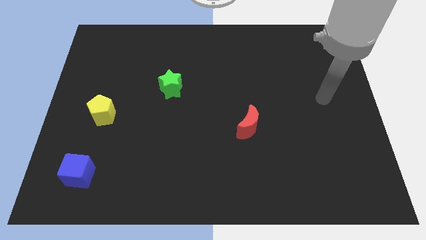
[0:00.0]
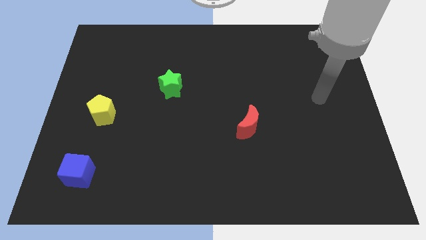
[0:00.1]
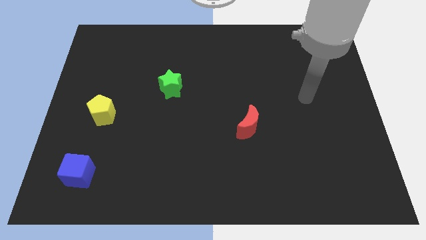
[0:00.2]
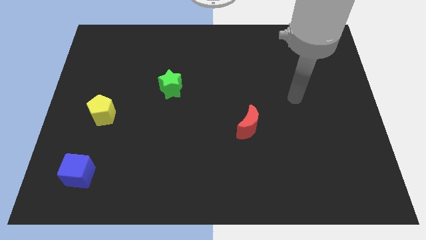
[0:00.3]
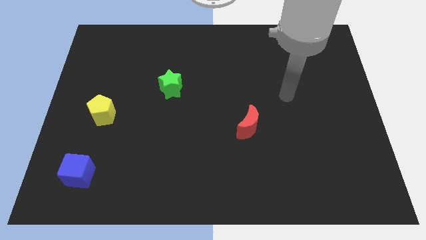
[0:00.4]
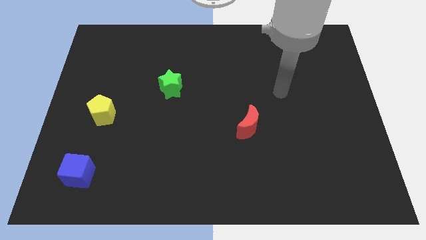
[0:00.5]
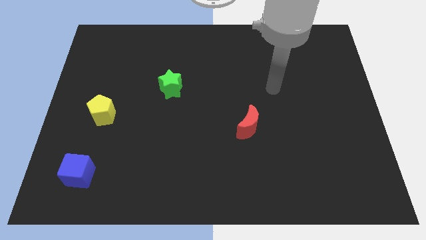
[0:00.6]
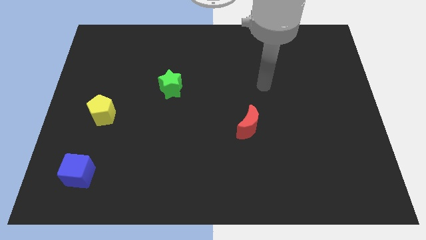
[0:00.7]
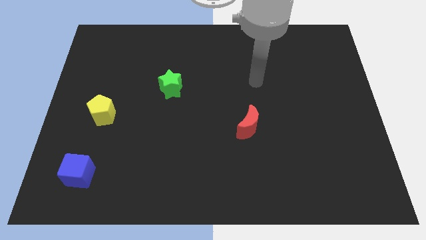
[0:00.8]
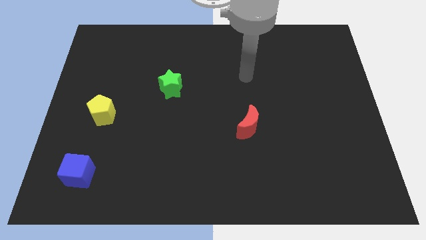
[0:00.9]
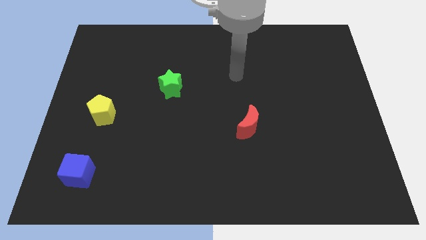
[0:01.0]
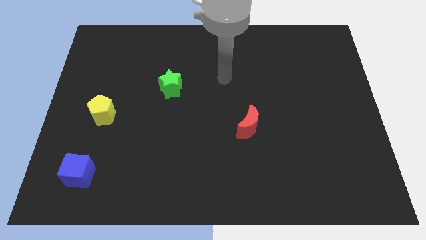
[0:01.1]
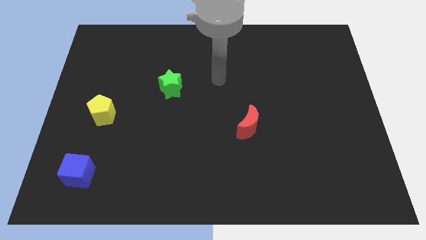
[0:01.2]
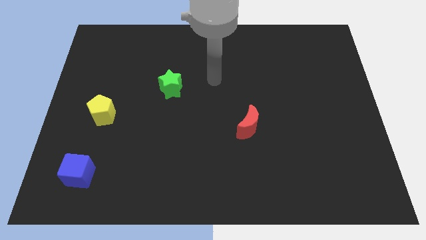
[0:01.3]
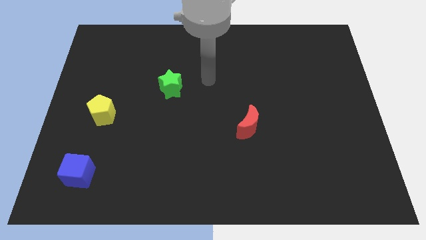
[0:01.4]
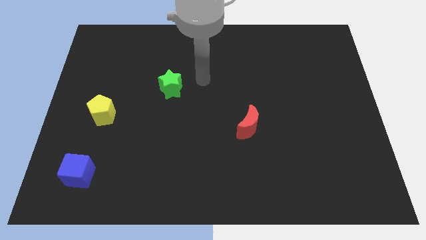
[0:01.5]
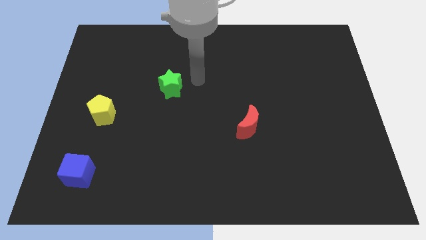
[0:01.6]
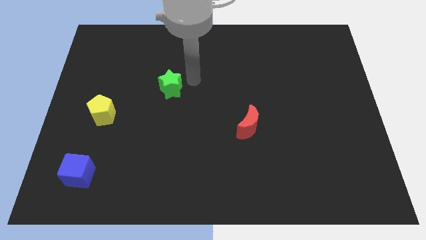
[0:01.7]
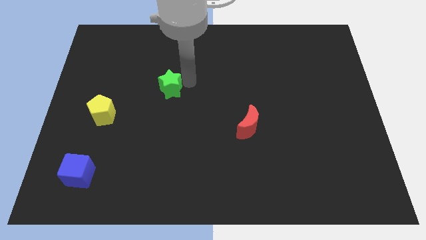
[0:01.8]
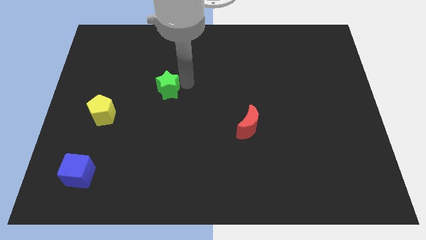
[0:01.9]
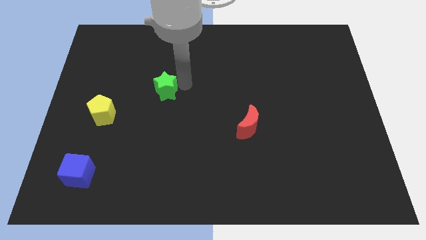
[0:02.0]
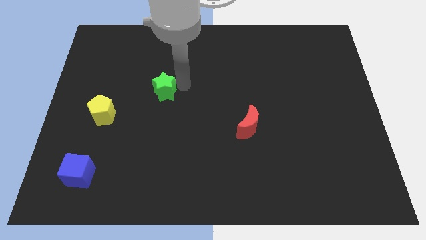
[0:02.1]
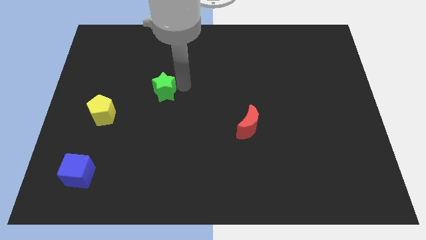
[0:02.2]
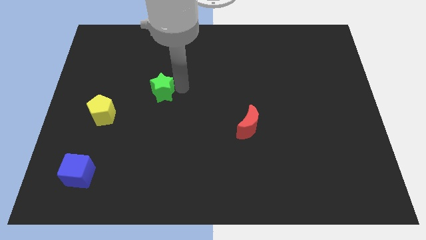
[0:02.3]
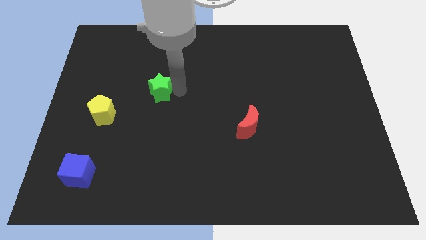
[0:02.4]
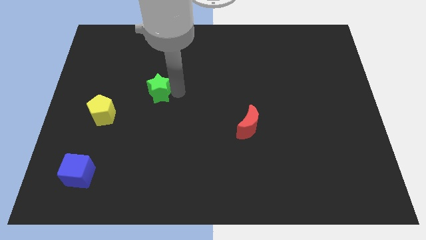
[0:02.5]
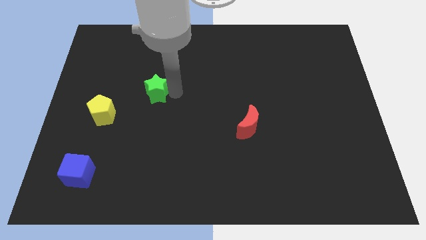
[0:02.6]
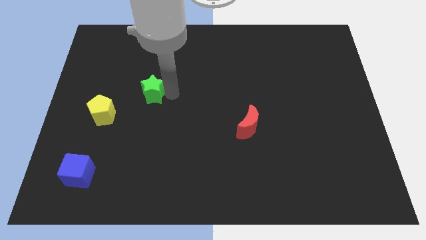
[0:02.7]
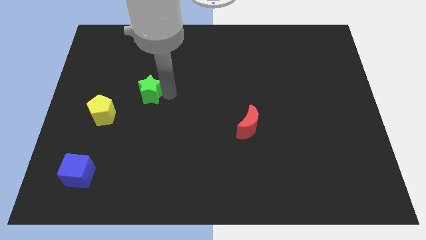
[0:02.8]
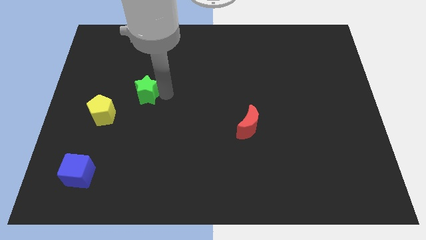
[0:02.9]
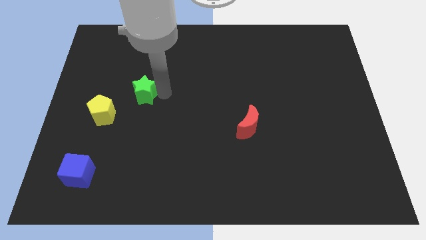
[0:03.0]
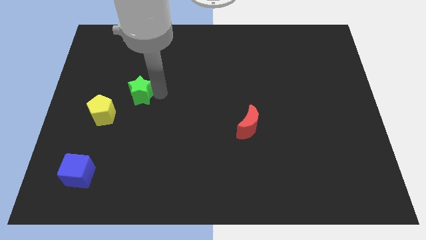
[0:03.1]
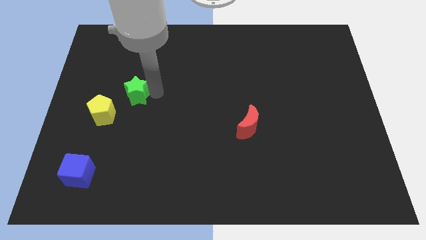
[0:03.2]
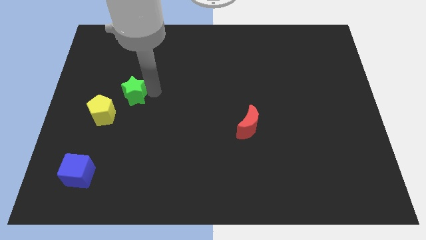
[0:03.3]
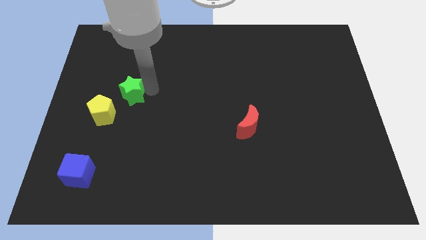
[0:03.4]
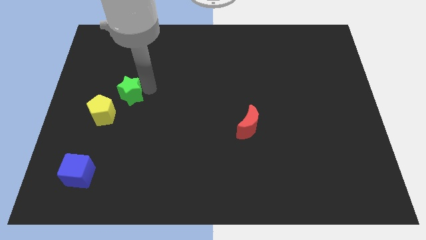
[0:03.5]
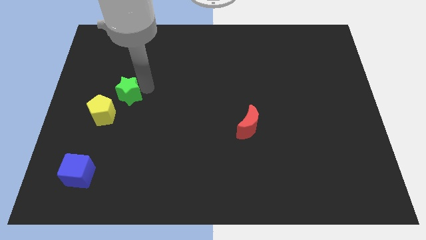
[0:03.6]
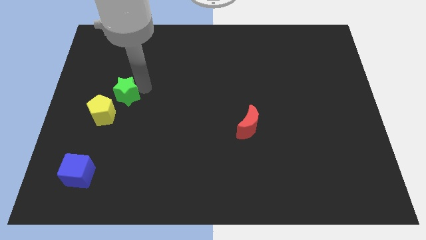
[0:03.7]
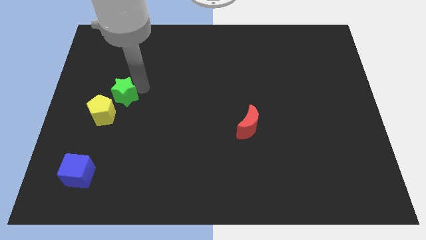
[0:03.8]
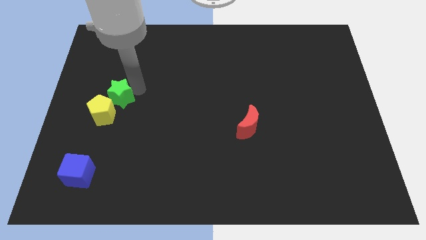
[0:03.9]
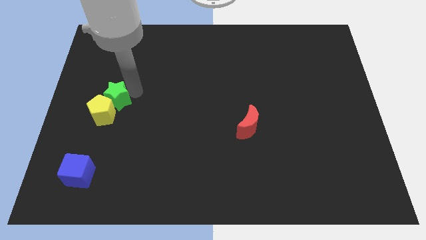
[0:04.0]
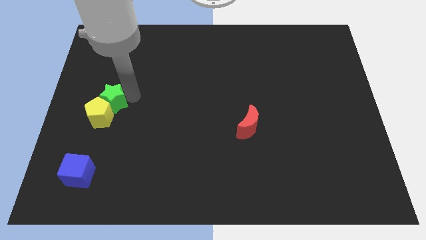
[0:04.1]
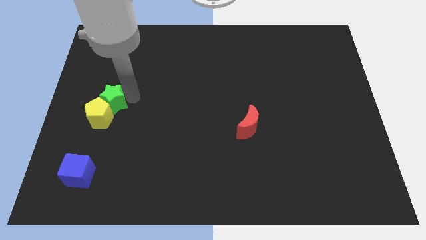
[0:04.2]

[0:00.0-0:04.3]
slide the star to the pentagon

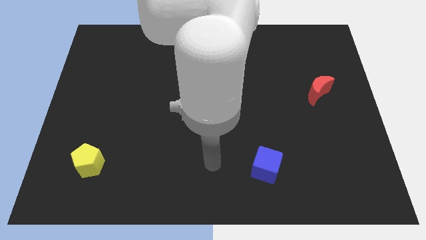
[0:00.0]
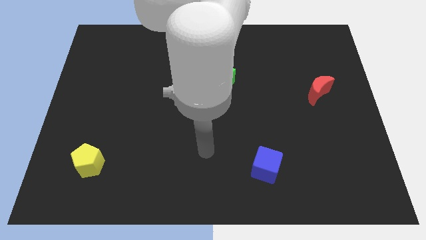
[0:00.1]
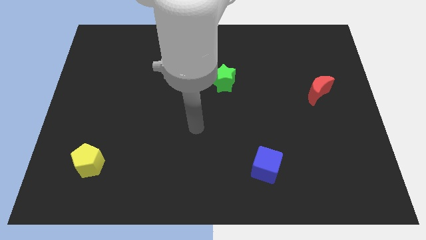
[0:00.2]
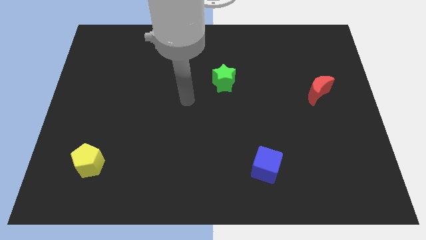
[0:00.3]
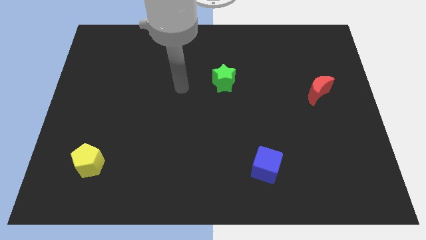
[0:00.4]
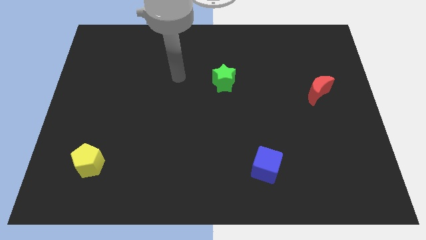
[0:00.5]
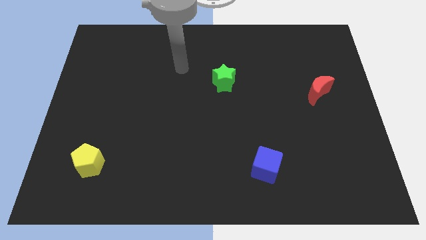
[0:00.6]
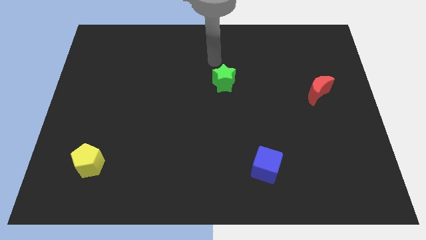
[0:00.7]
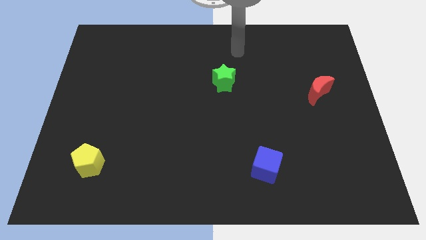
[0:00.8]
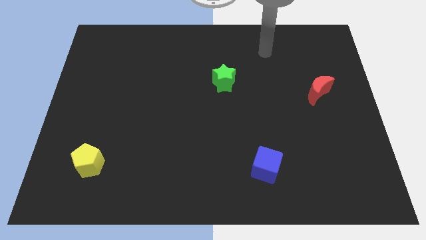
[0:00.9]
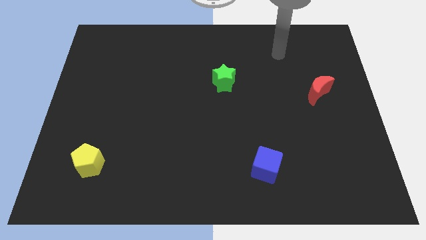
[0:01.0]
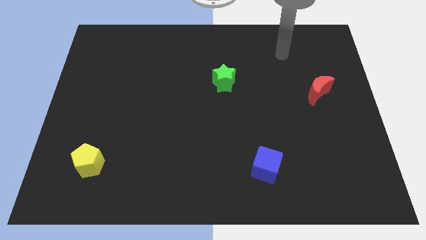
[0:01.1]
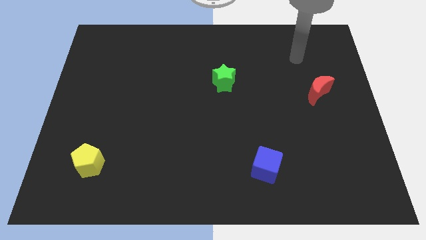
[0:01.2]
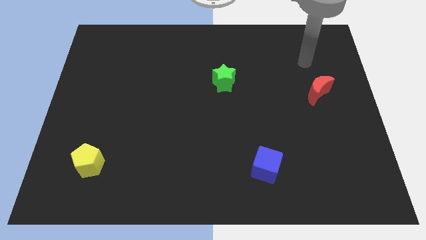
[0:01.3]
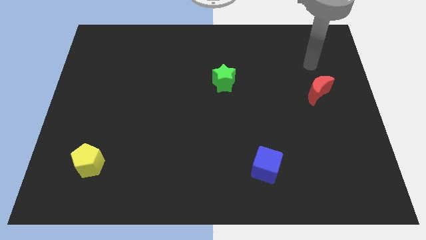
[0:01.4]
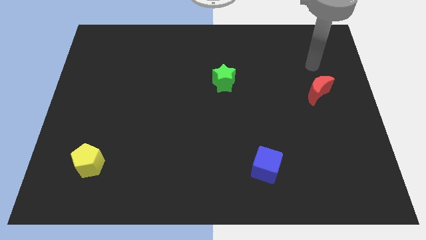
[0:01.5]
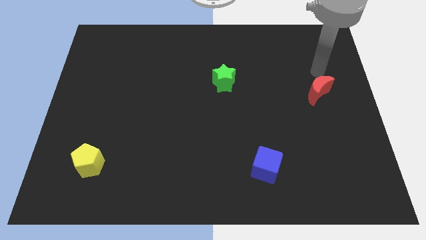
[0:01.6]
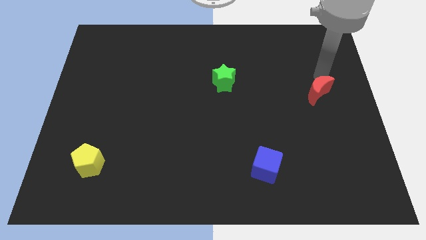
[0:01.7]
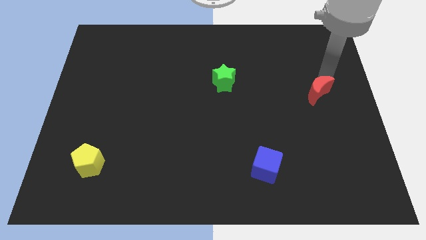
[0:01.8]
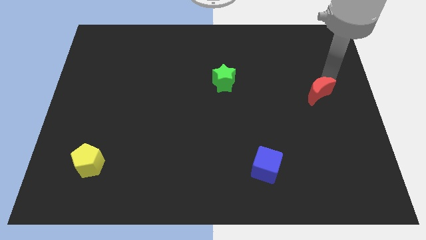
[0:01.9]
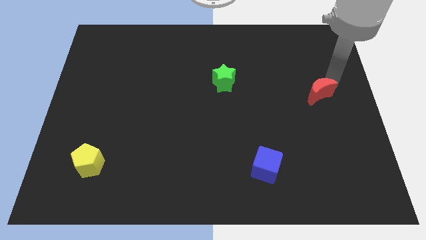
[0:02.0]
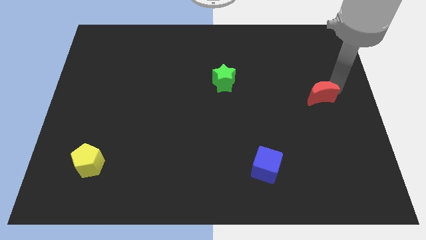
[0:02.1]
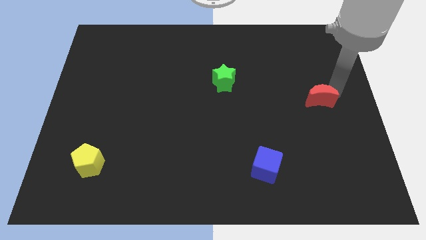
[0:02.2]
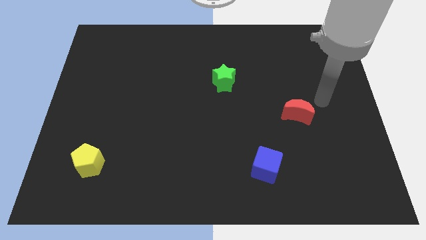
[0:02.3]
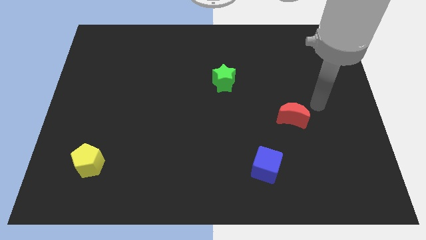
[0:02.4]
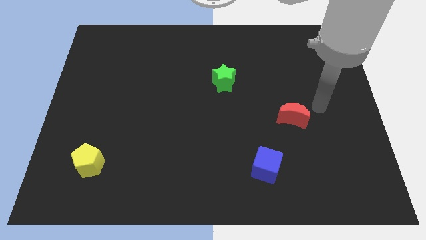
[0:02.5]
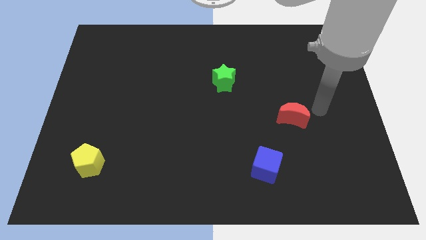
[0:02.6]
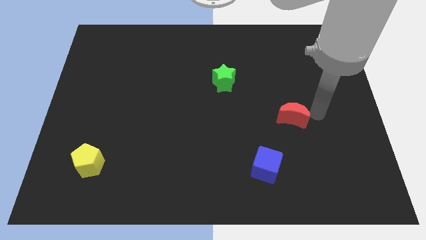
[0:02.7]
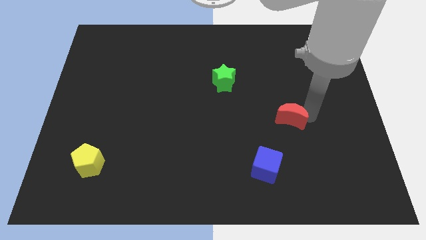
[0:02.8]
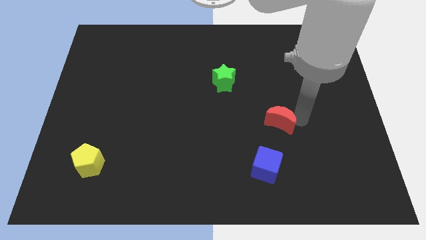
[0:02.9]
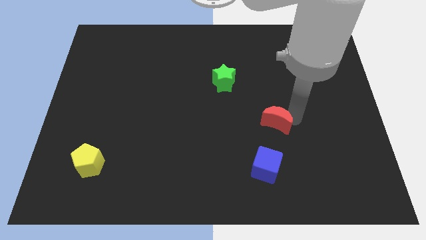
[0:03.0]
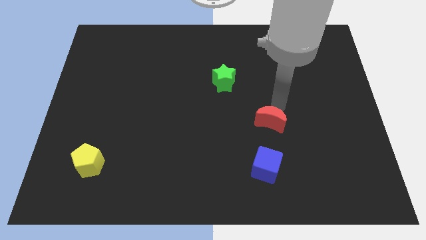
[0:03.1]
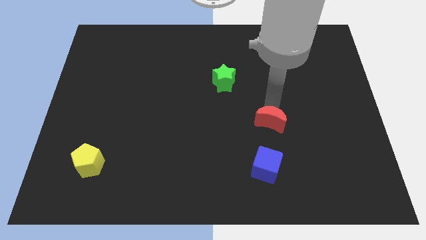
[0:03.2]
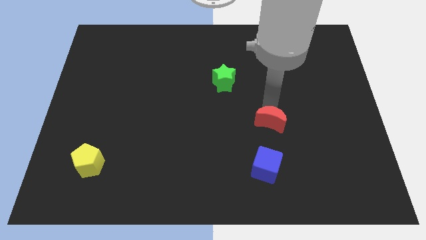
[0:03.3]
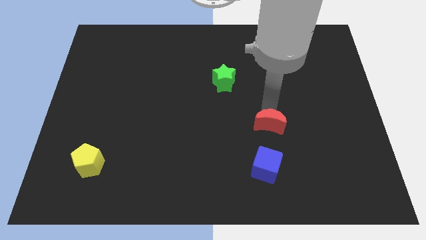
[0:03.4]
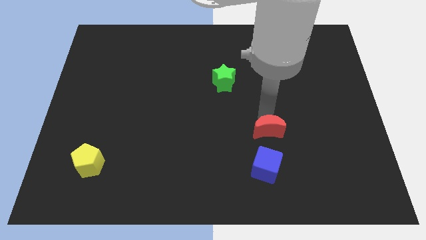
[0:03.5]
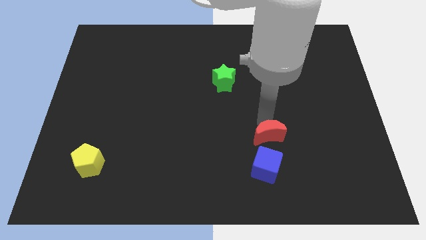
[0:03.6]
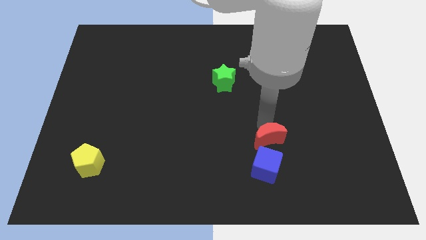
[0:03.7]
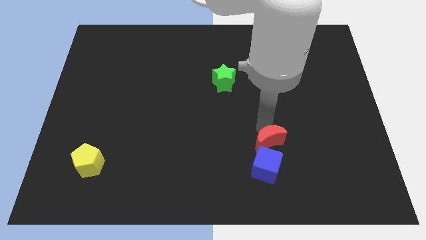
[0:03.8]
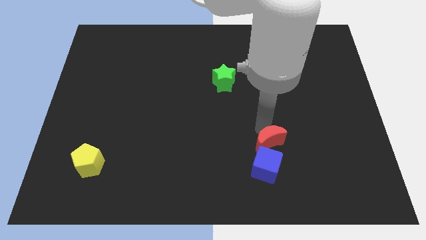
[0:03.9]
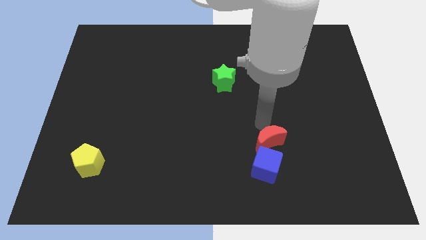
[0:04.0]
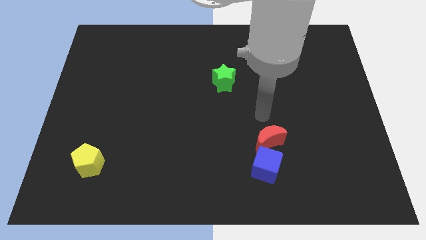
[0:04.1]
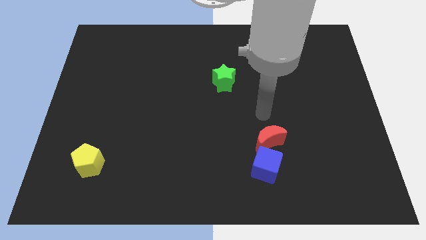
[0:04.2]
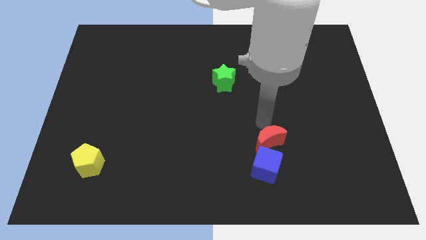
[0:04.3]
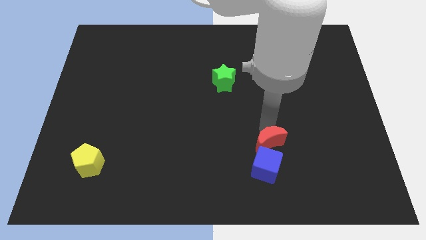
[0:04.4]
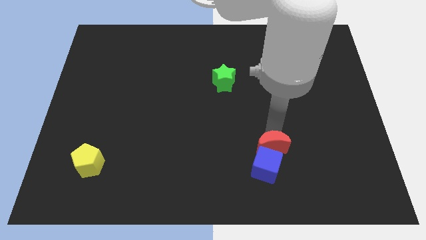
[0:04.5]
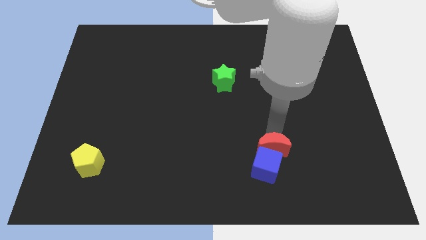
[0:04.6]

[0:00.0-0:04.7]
push the red moon towards the blue cube
